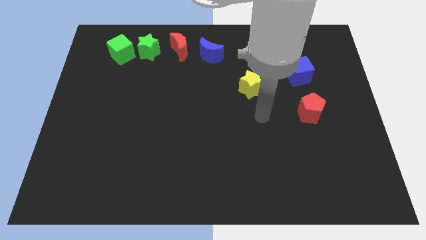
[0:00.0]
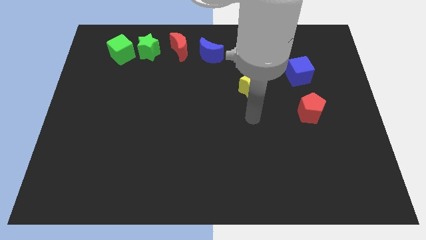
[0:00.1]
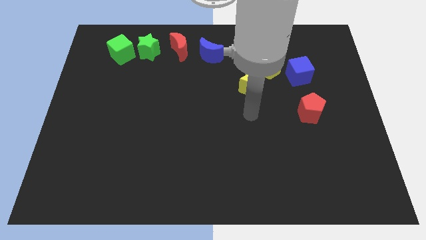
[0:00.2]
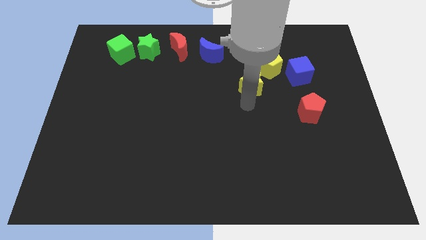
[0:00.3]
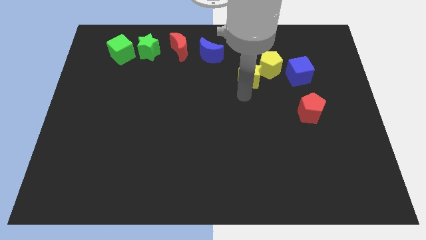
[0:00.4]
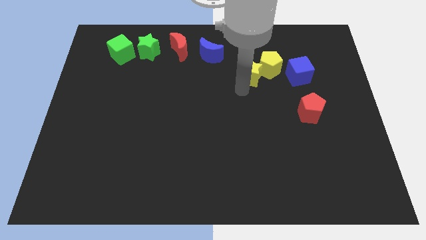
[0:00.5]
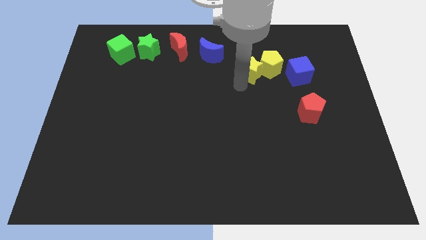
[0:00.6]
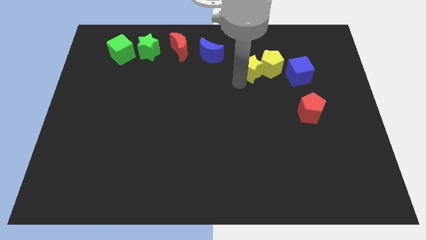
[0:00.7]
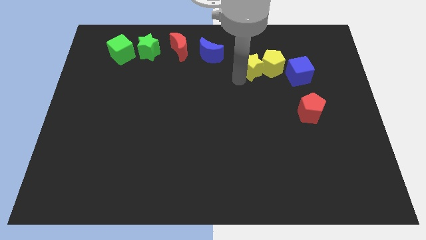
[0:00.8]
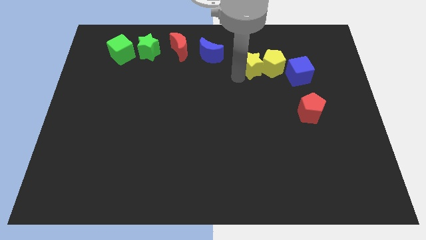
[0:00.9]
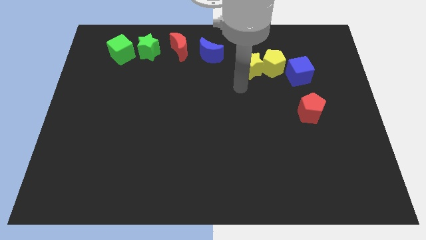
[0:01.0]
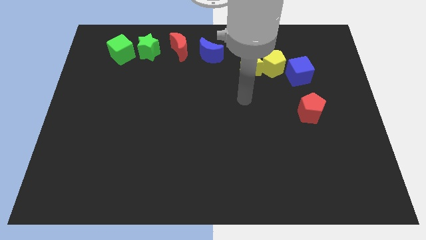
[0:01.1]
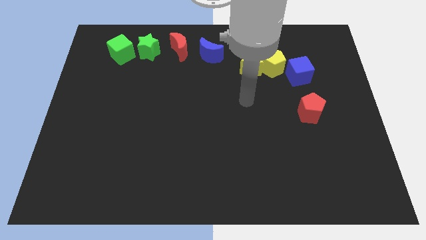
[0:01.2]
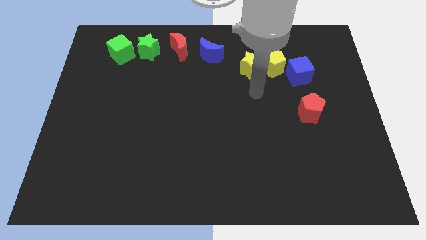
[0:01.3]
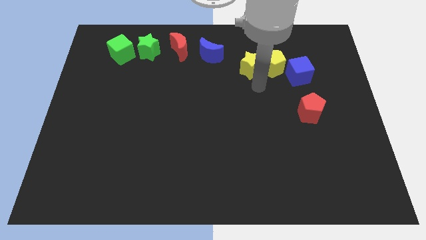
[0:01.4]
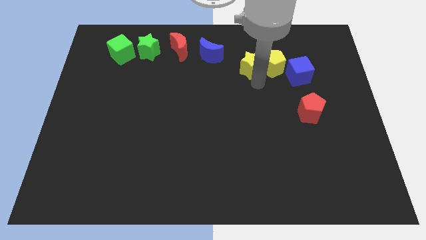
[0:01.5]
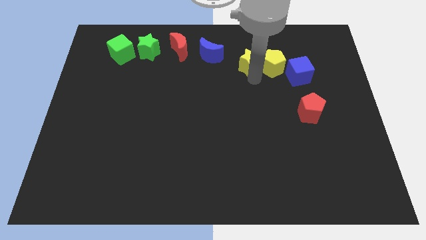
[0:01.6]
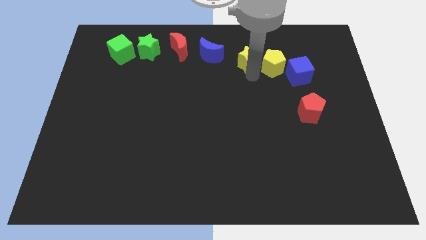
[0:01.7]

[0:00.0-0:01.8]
drag the yellow star to the left side of the yellow pentagon

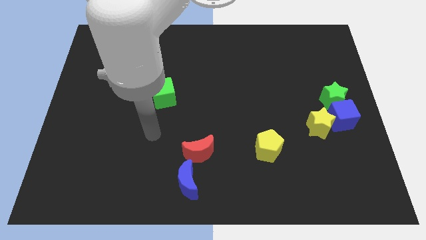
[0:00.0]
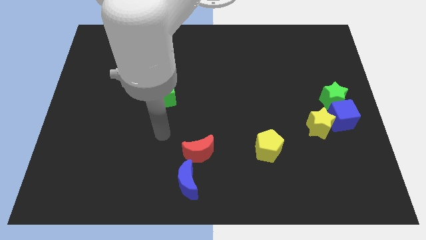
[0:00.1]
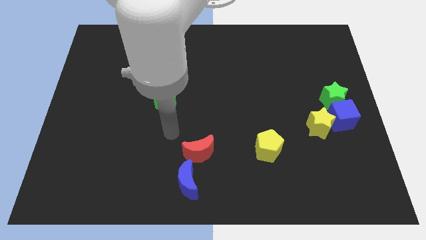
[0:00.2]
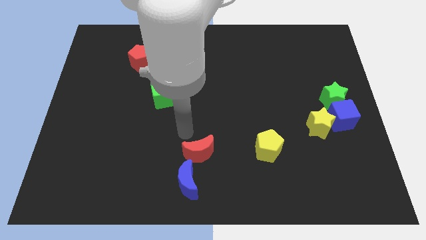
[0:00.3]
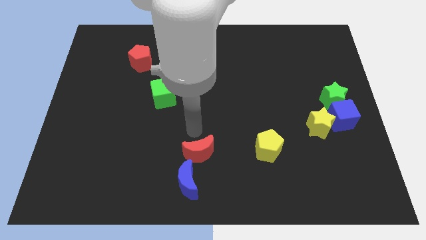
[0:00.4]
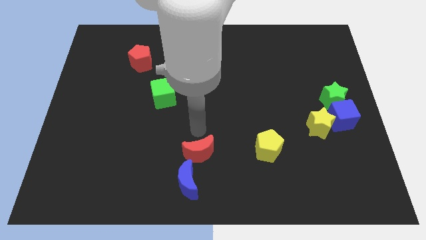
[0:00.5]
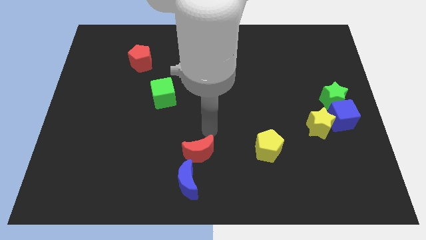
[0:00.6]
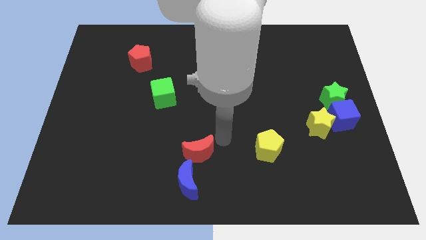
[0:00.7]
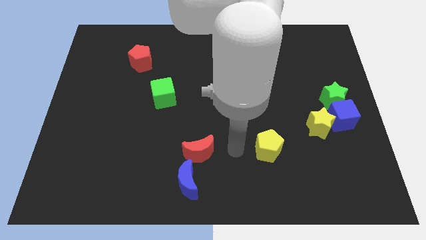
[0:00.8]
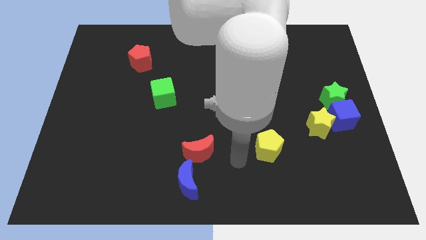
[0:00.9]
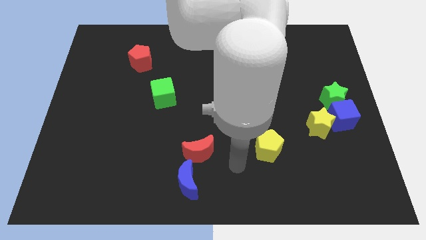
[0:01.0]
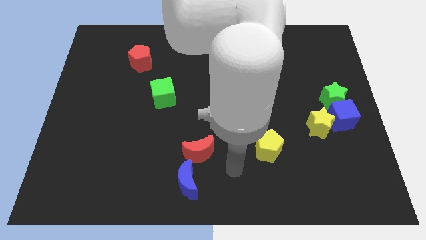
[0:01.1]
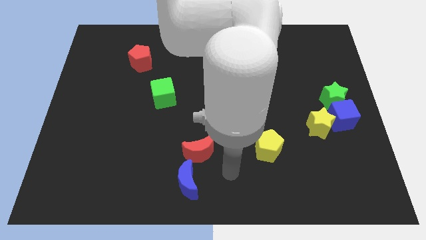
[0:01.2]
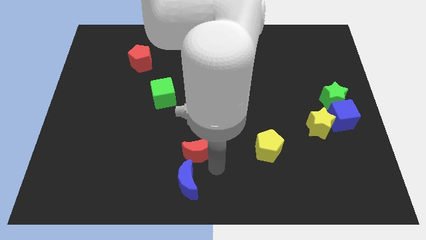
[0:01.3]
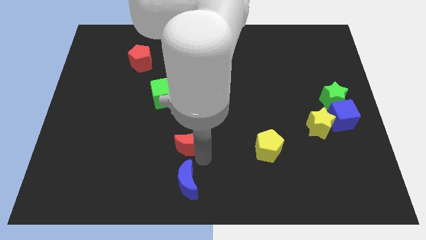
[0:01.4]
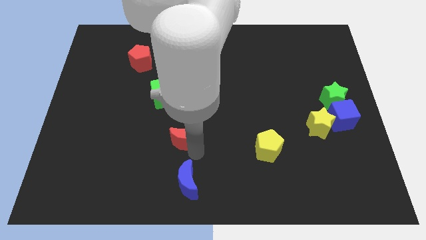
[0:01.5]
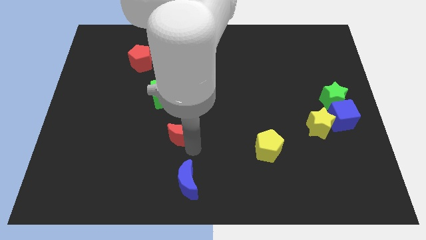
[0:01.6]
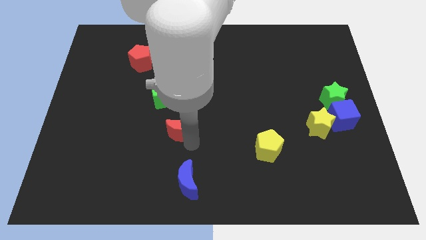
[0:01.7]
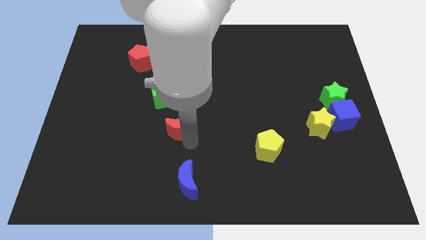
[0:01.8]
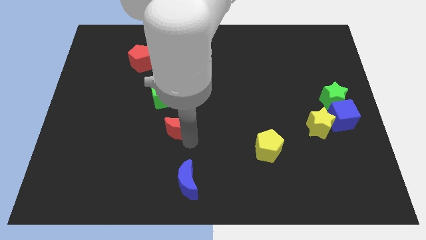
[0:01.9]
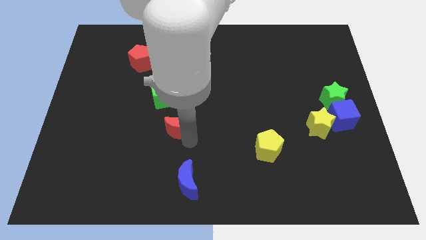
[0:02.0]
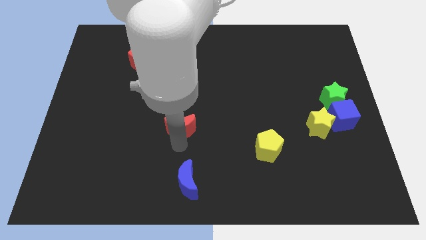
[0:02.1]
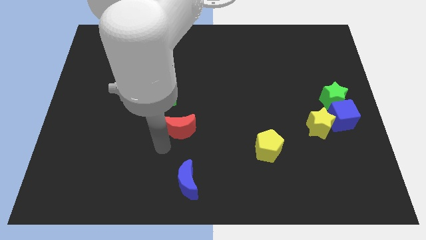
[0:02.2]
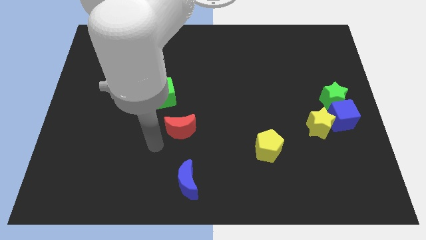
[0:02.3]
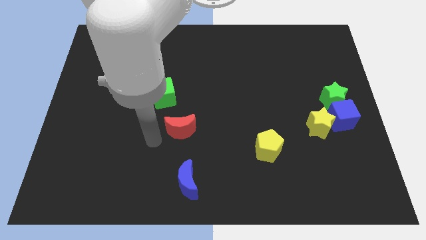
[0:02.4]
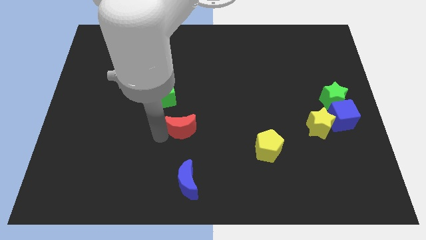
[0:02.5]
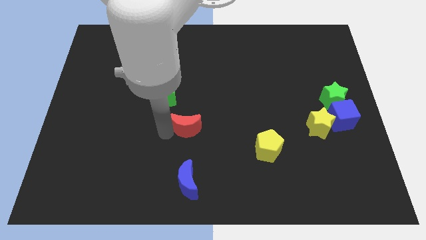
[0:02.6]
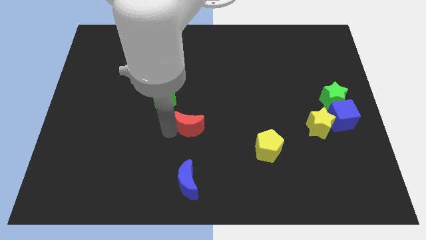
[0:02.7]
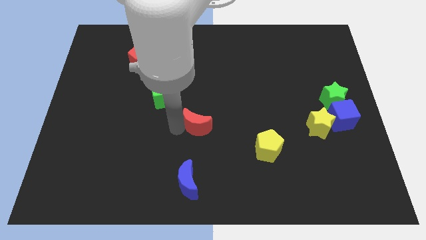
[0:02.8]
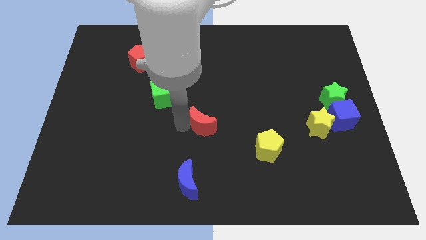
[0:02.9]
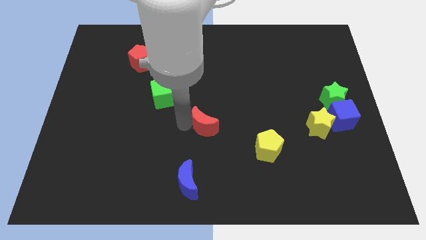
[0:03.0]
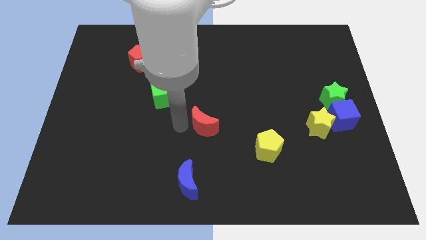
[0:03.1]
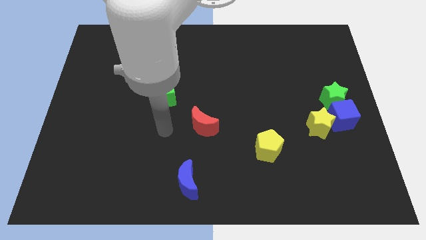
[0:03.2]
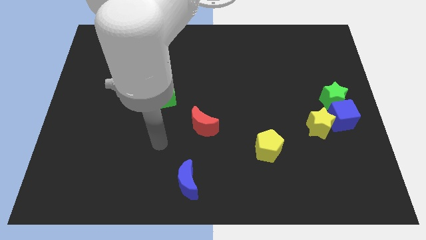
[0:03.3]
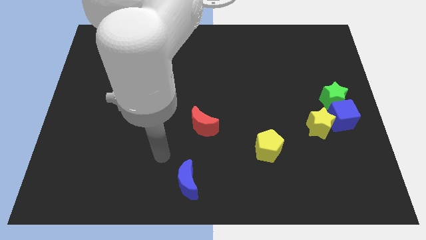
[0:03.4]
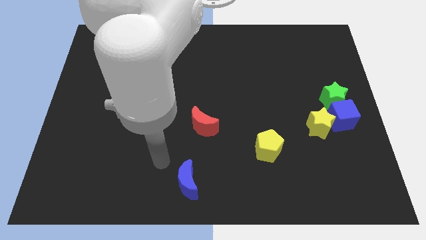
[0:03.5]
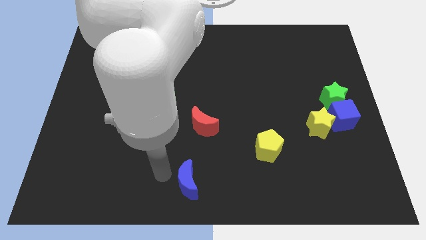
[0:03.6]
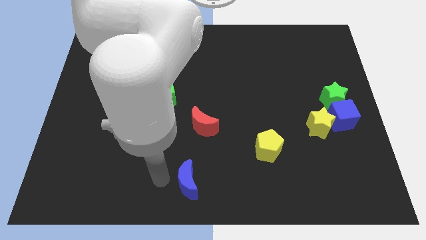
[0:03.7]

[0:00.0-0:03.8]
move red crescent to the center of the board

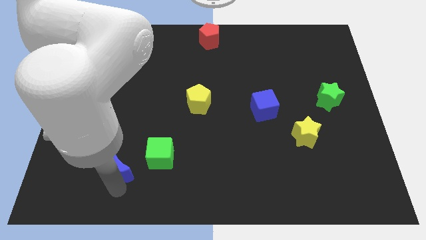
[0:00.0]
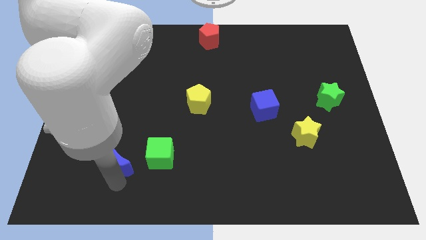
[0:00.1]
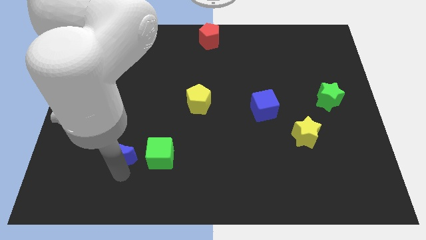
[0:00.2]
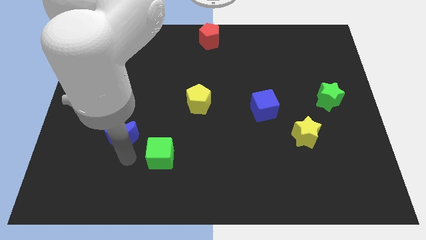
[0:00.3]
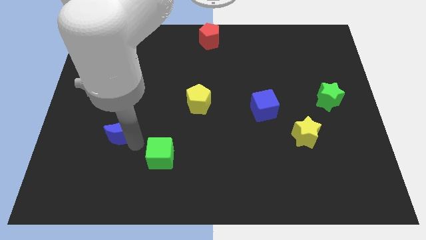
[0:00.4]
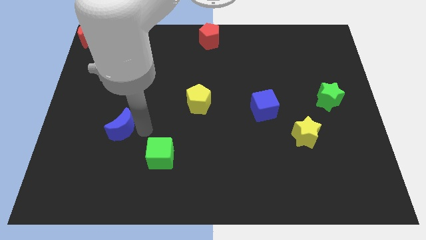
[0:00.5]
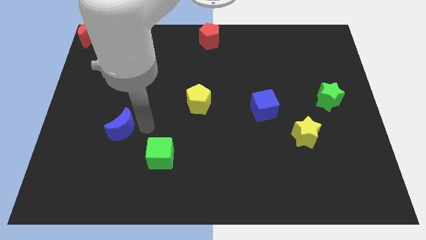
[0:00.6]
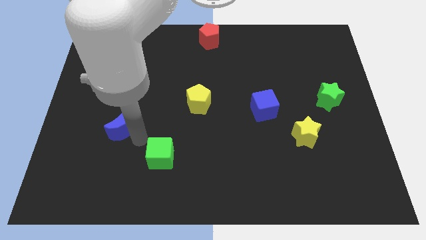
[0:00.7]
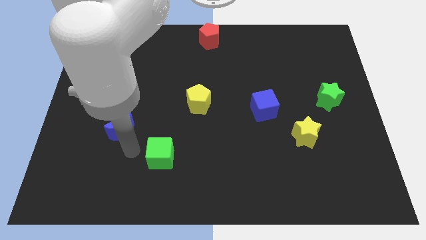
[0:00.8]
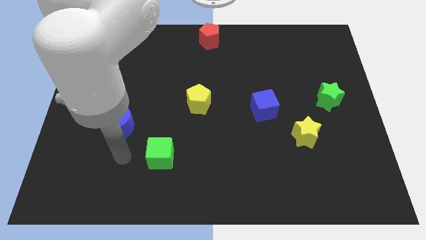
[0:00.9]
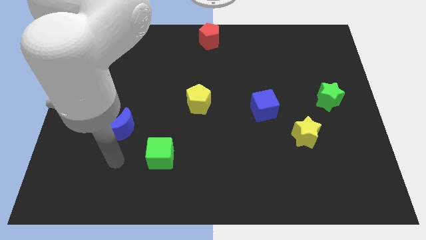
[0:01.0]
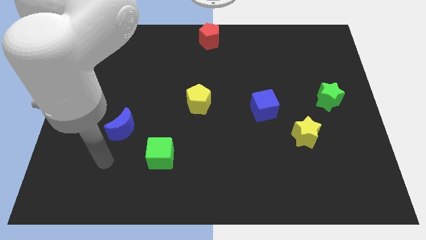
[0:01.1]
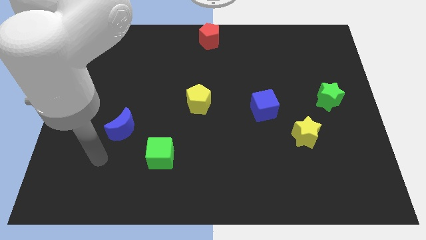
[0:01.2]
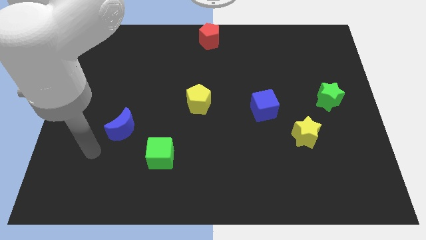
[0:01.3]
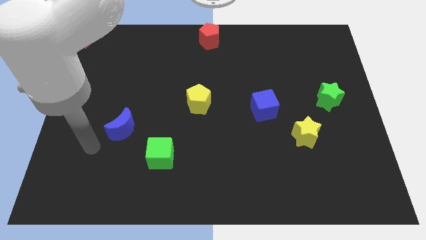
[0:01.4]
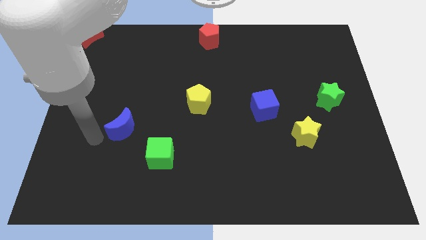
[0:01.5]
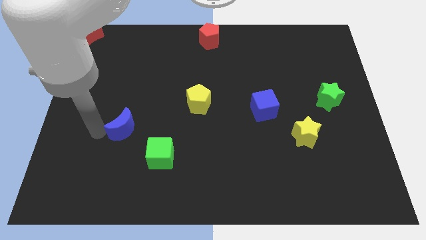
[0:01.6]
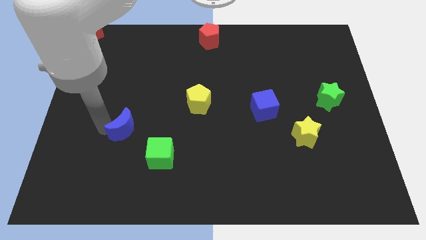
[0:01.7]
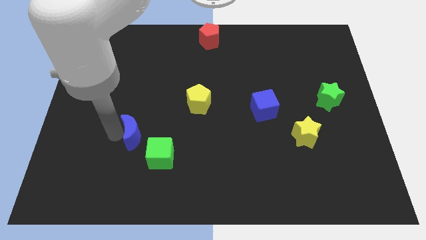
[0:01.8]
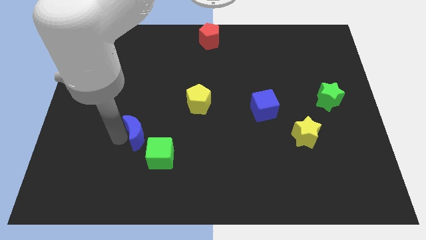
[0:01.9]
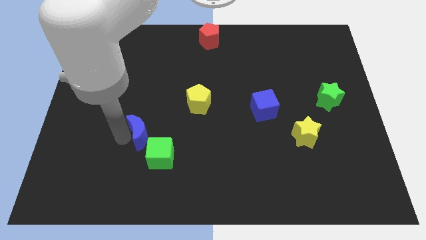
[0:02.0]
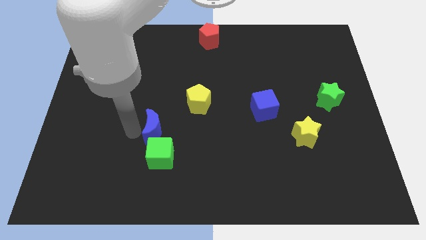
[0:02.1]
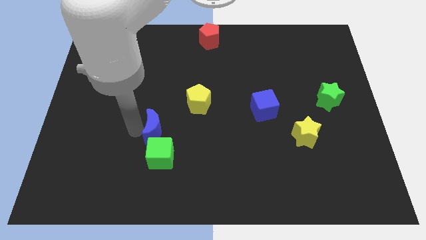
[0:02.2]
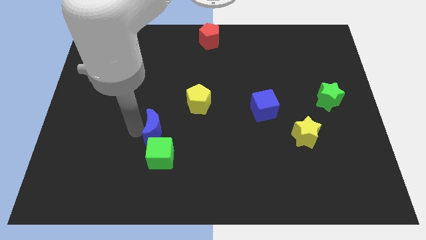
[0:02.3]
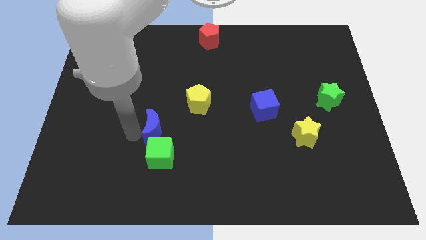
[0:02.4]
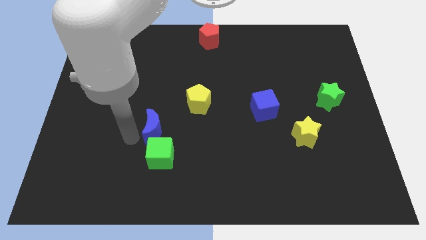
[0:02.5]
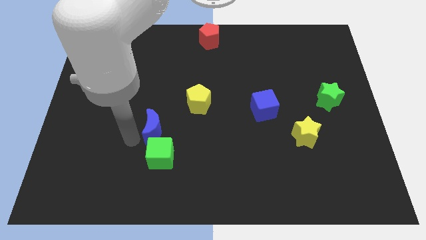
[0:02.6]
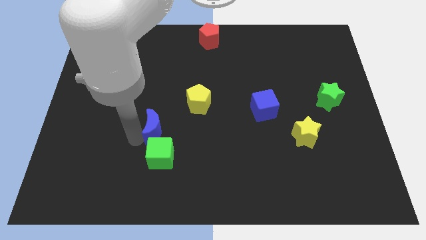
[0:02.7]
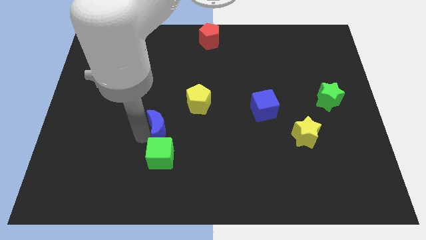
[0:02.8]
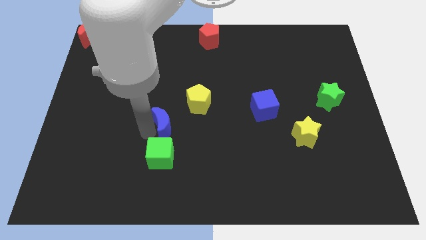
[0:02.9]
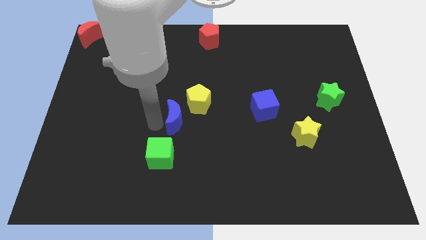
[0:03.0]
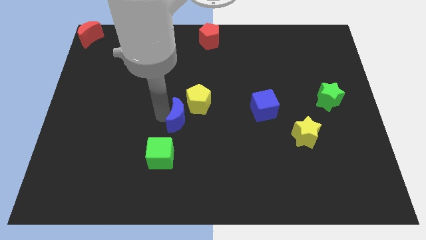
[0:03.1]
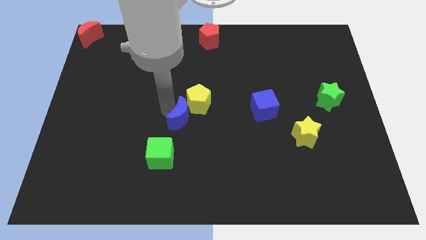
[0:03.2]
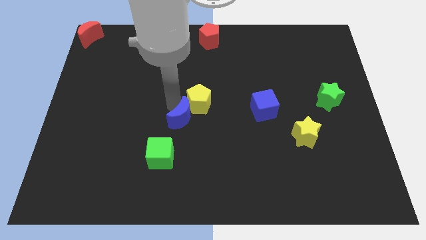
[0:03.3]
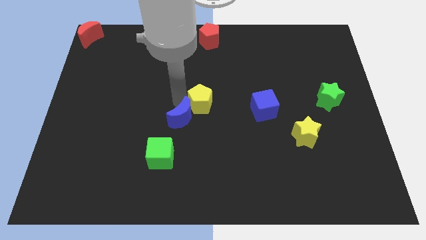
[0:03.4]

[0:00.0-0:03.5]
push the blue moon into the yellow pentagon
